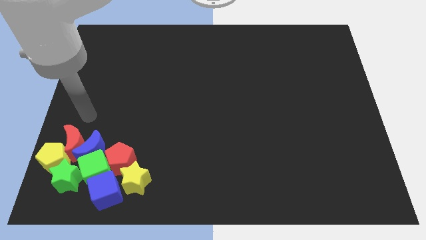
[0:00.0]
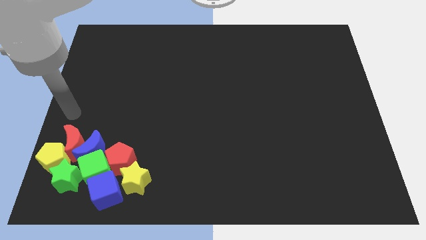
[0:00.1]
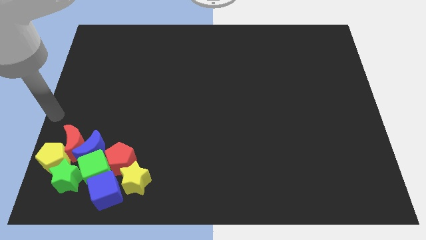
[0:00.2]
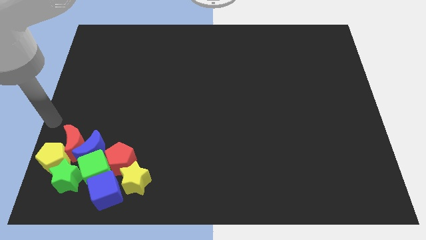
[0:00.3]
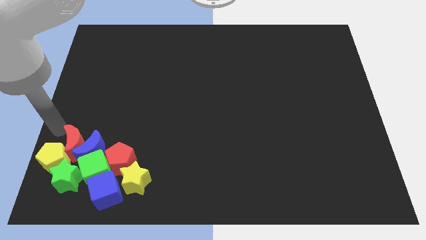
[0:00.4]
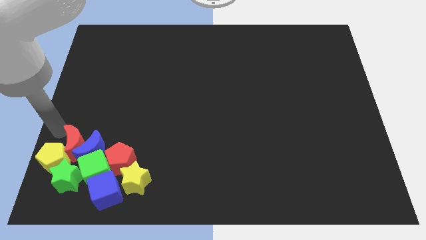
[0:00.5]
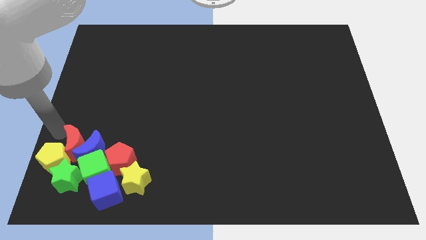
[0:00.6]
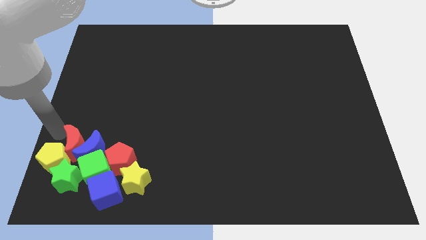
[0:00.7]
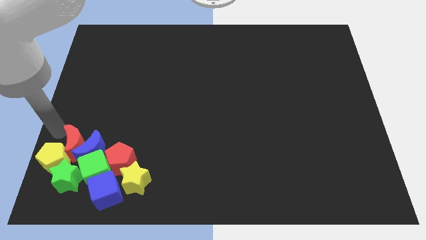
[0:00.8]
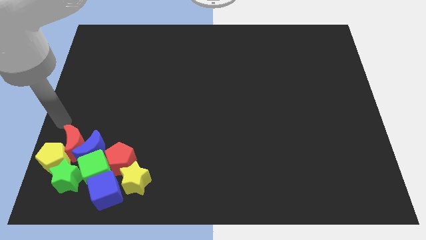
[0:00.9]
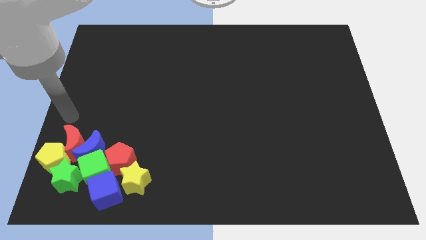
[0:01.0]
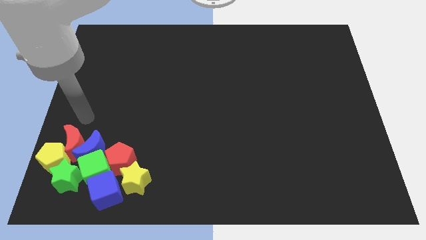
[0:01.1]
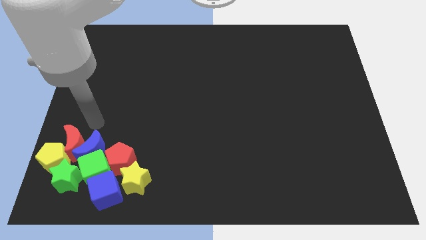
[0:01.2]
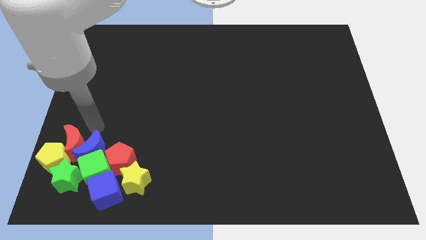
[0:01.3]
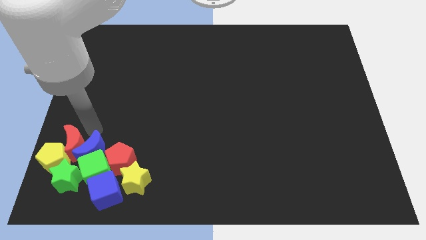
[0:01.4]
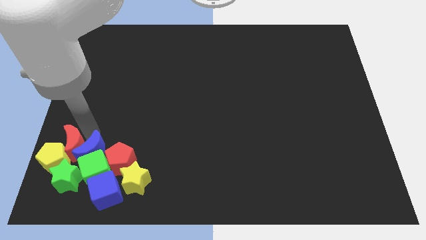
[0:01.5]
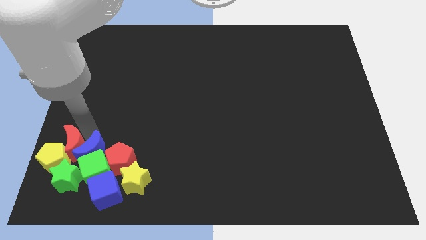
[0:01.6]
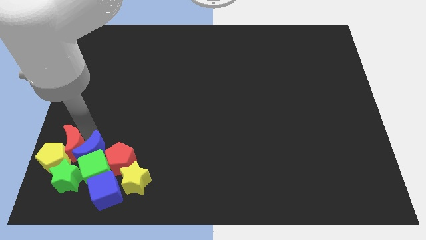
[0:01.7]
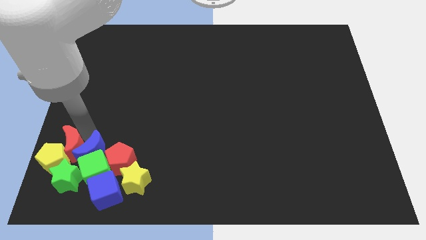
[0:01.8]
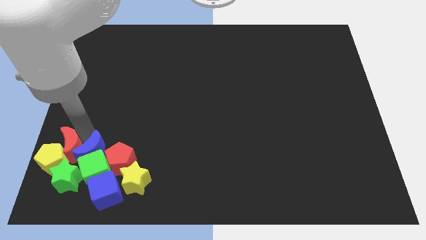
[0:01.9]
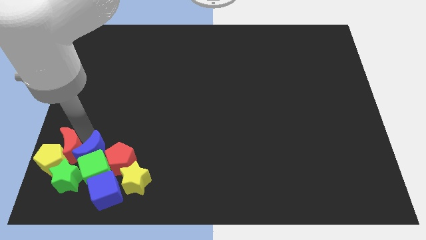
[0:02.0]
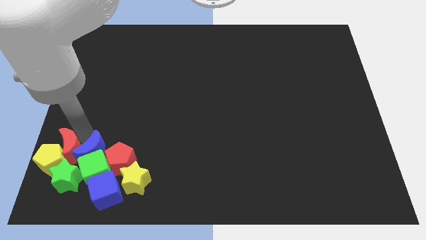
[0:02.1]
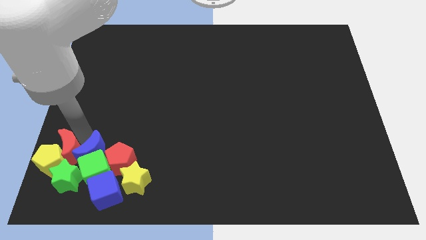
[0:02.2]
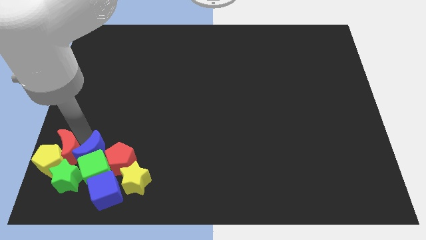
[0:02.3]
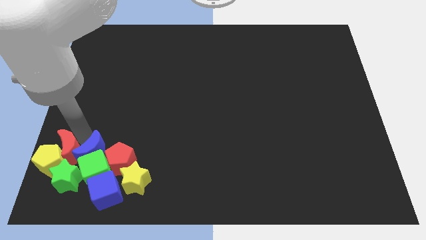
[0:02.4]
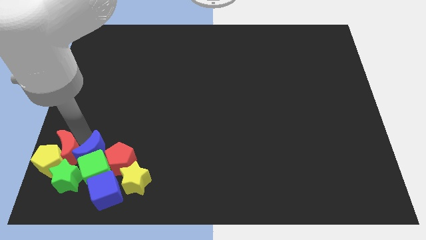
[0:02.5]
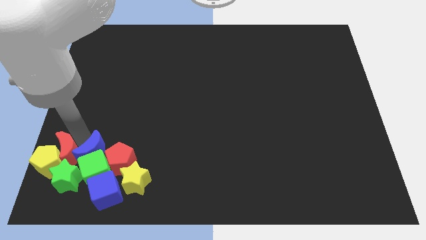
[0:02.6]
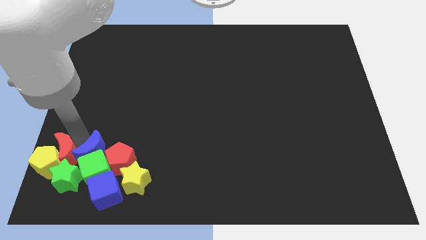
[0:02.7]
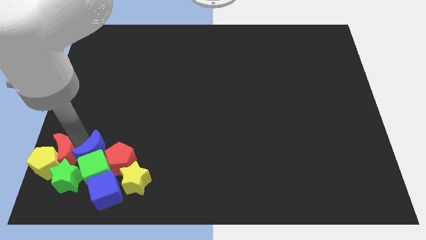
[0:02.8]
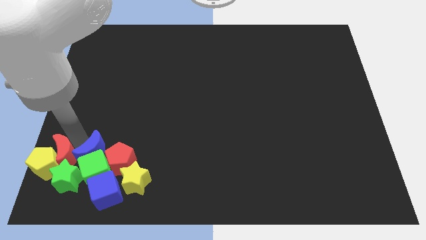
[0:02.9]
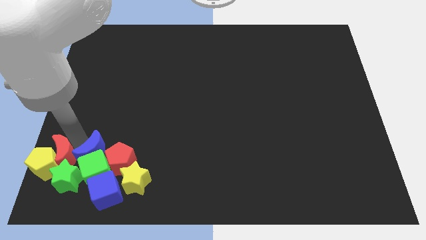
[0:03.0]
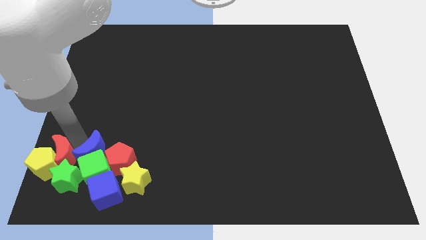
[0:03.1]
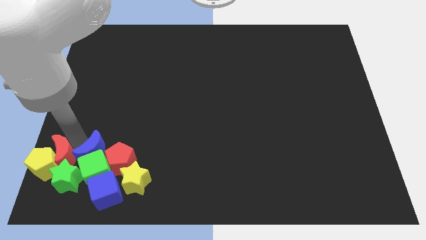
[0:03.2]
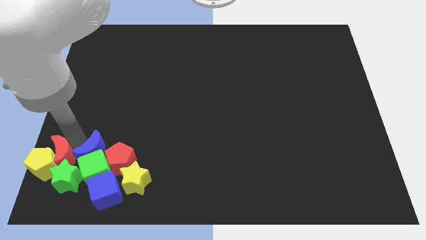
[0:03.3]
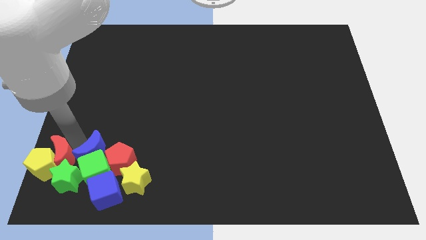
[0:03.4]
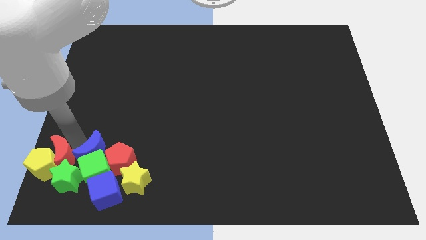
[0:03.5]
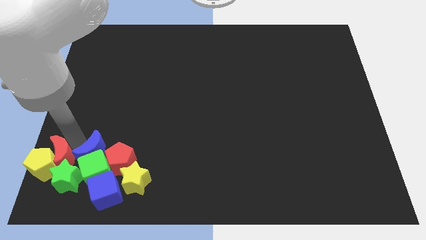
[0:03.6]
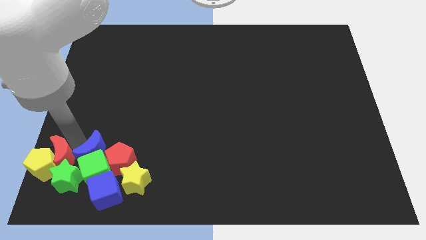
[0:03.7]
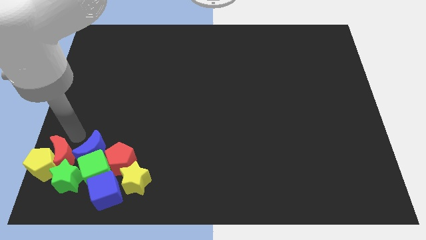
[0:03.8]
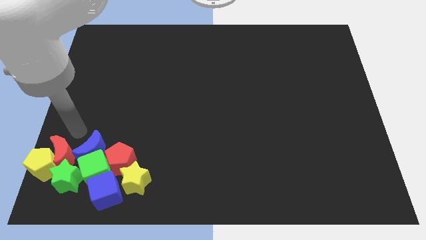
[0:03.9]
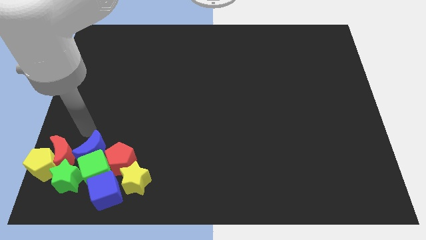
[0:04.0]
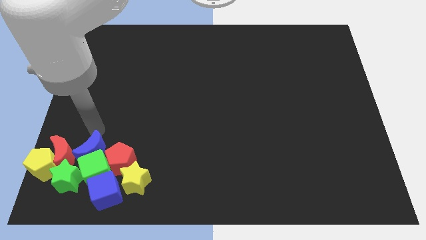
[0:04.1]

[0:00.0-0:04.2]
push the red crescent into the yellow pentagon

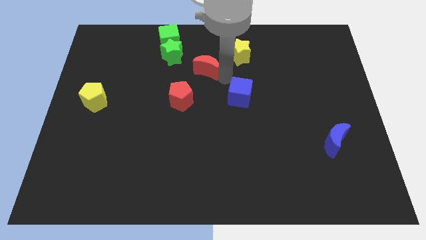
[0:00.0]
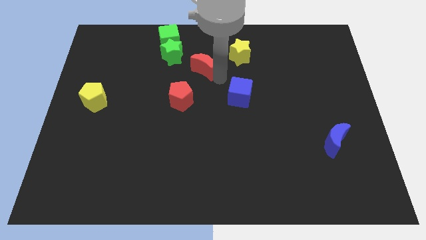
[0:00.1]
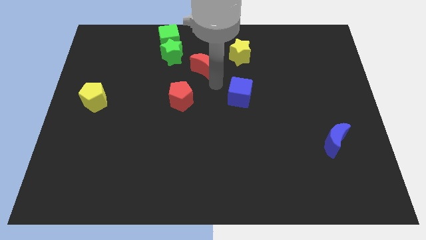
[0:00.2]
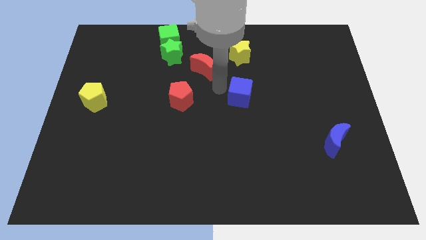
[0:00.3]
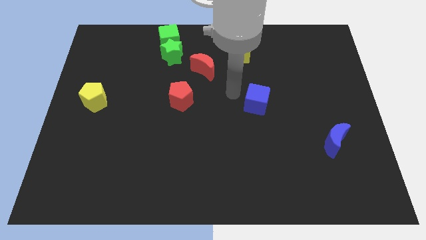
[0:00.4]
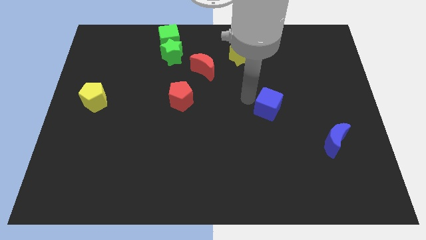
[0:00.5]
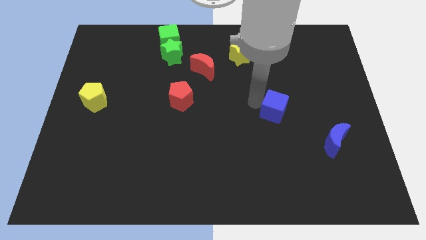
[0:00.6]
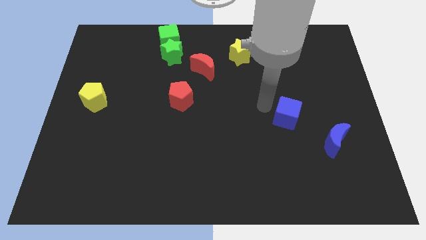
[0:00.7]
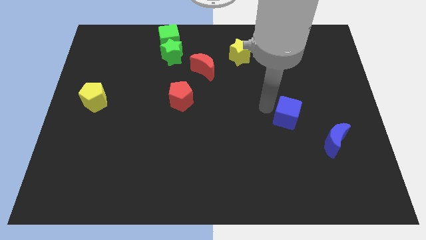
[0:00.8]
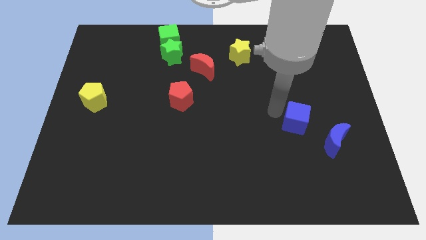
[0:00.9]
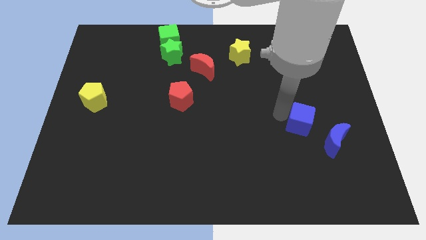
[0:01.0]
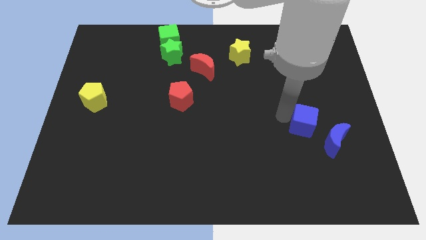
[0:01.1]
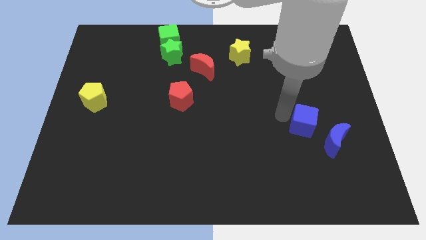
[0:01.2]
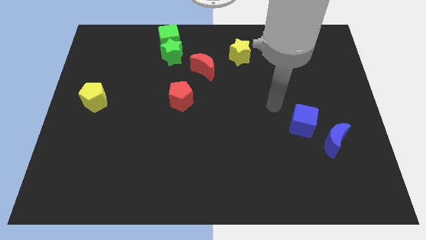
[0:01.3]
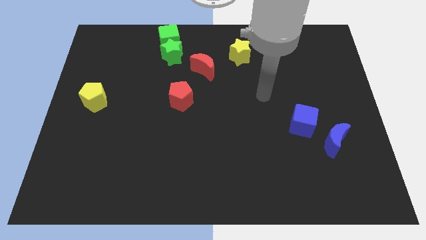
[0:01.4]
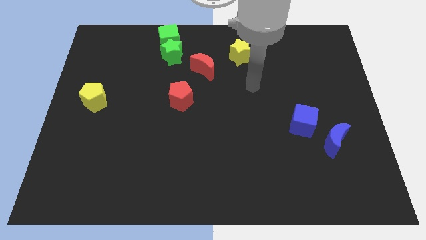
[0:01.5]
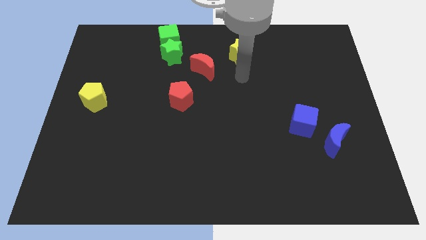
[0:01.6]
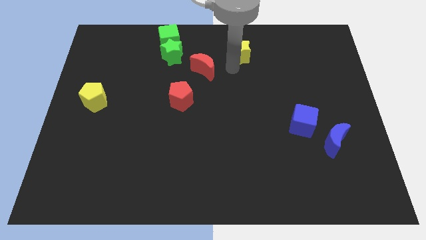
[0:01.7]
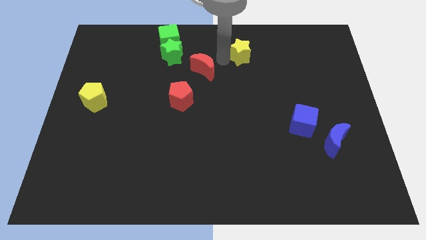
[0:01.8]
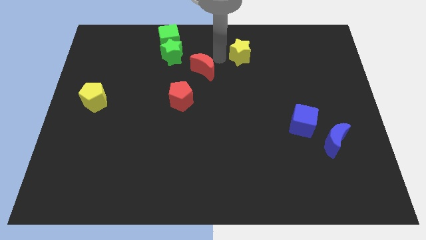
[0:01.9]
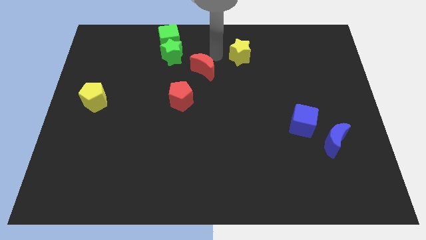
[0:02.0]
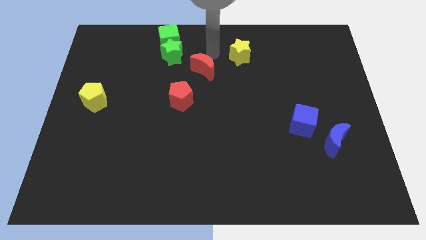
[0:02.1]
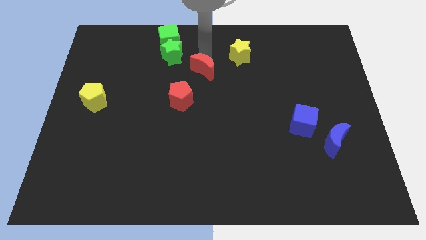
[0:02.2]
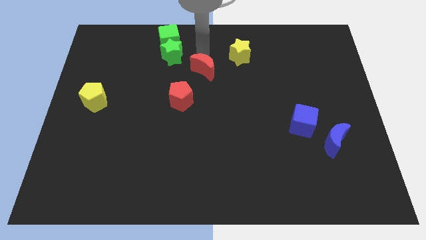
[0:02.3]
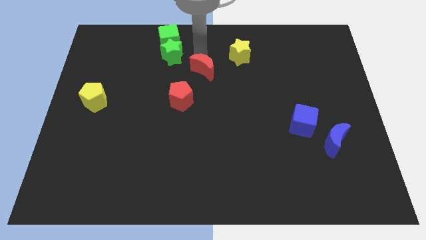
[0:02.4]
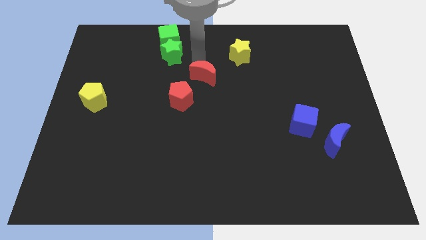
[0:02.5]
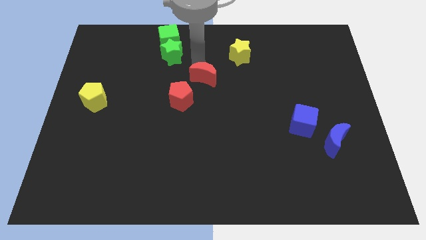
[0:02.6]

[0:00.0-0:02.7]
move the blue cube diagonally to the blue crescent

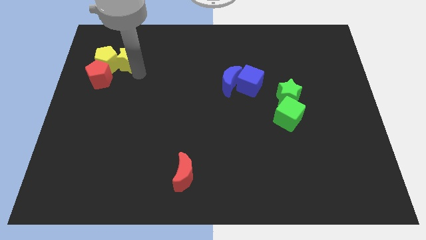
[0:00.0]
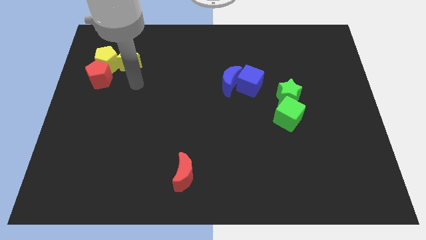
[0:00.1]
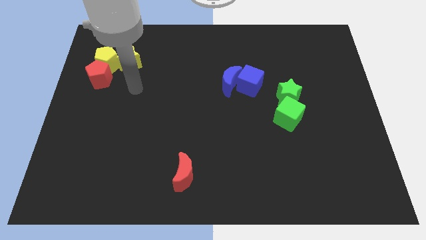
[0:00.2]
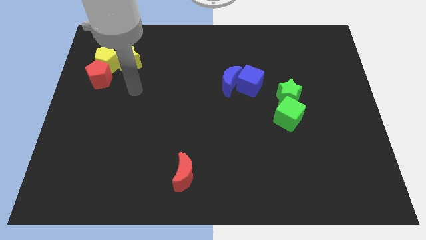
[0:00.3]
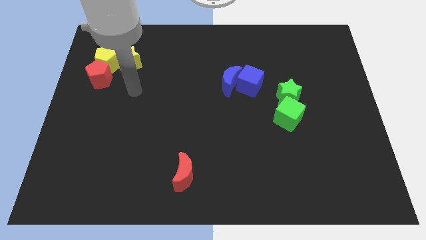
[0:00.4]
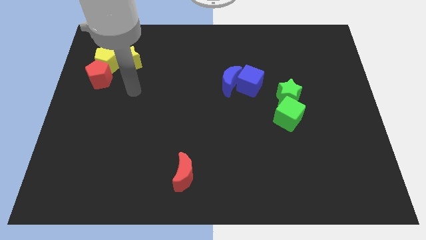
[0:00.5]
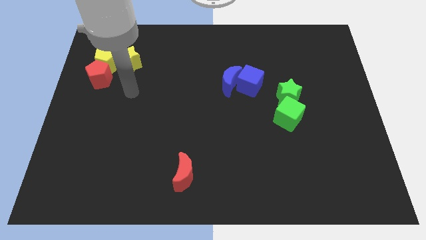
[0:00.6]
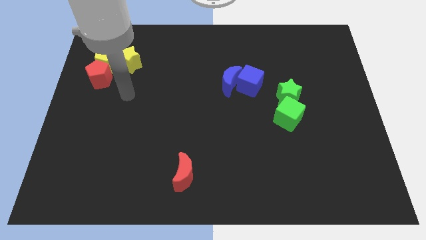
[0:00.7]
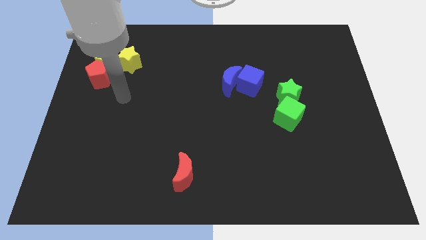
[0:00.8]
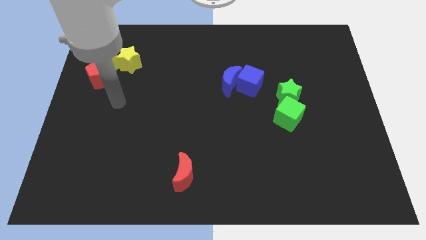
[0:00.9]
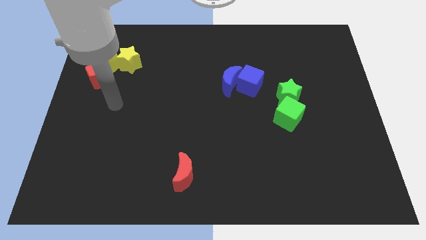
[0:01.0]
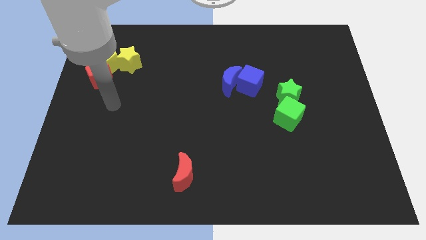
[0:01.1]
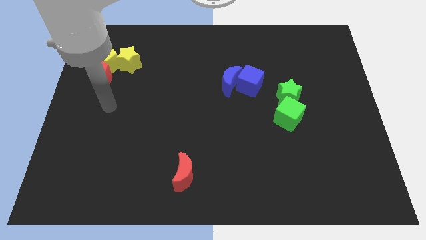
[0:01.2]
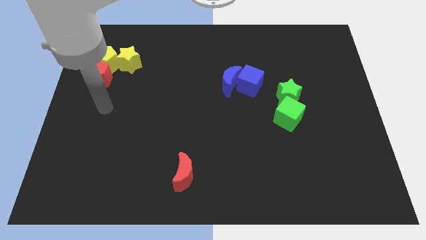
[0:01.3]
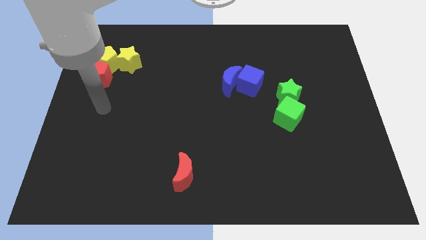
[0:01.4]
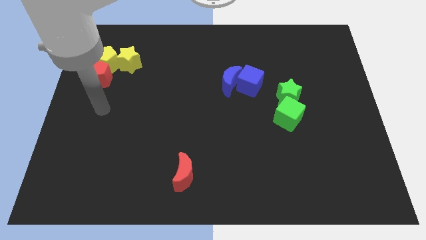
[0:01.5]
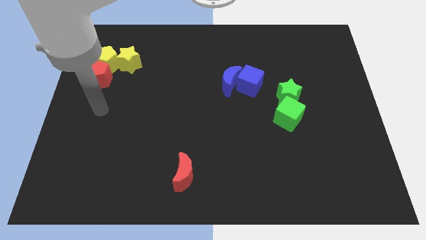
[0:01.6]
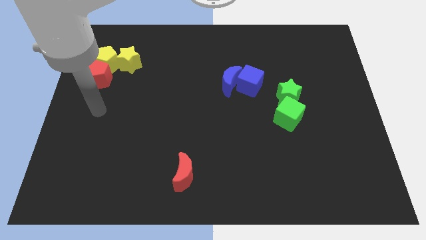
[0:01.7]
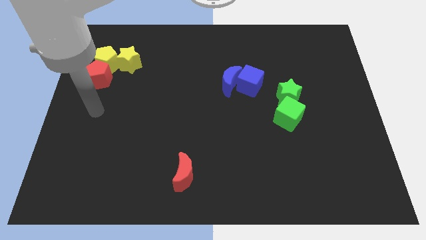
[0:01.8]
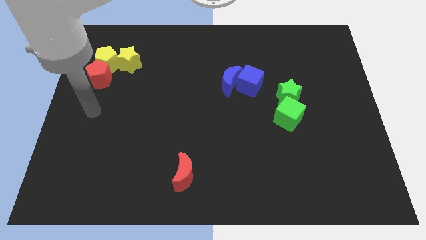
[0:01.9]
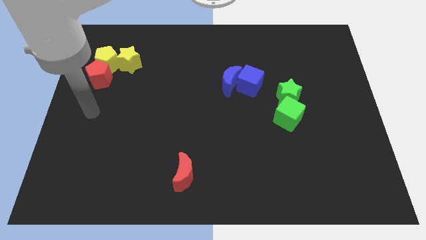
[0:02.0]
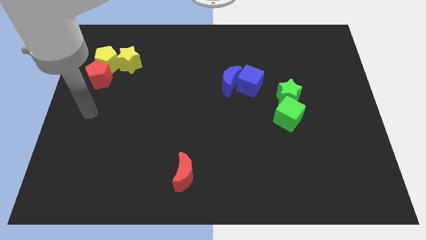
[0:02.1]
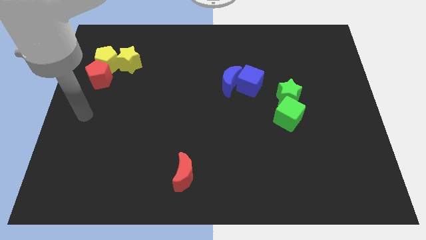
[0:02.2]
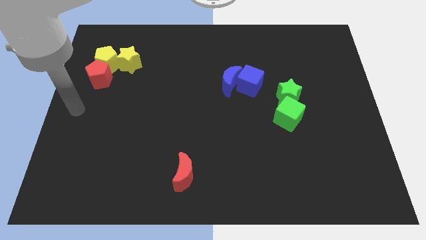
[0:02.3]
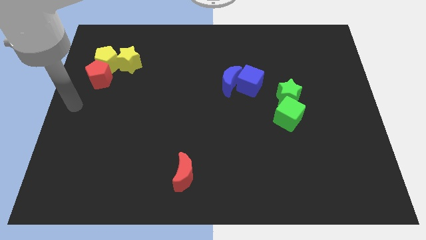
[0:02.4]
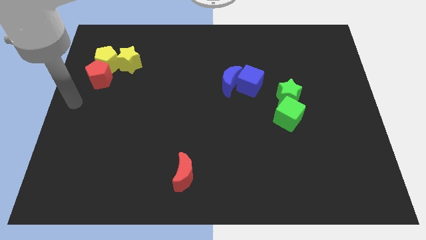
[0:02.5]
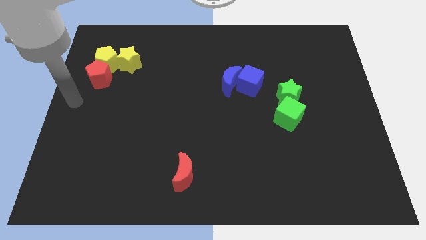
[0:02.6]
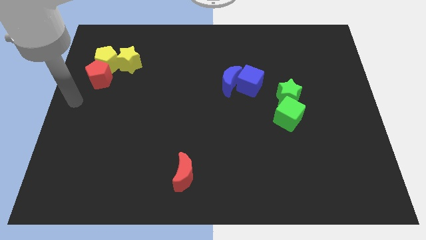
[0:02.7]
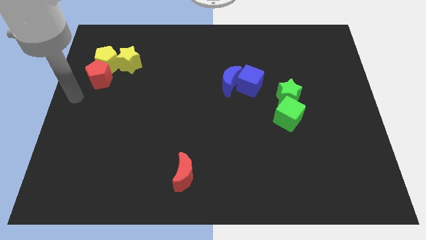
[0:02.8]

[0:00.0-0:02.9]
move the arm to the bottom left to the red pentagon
